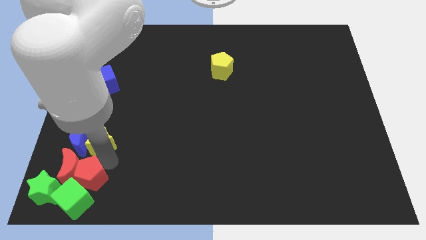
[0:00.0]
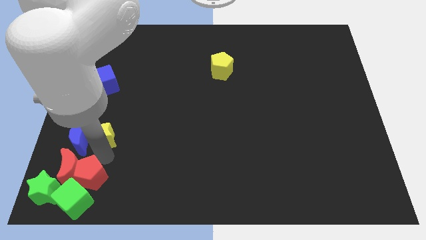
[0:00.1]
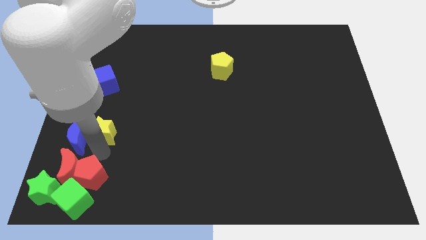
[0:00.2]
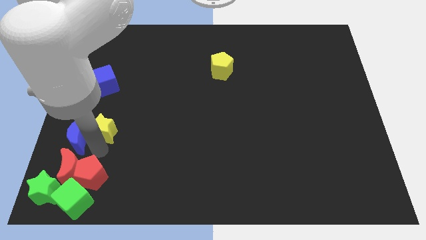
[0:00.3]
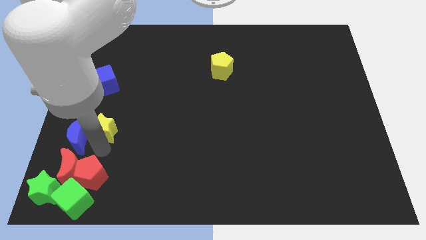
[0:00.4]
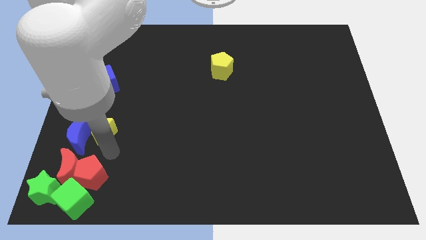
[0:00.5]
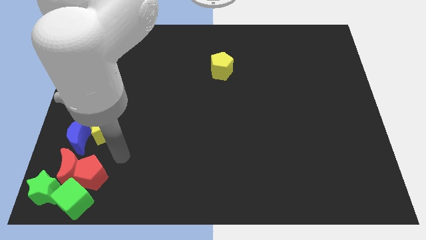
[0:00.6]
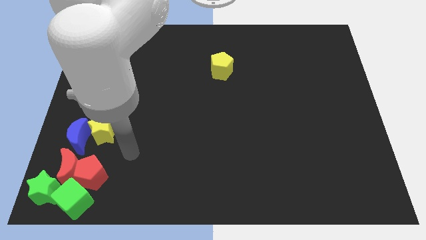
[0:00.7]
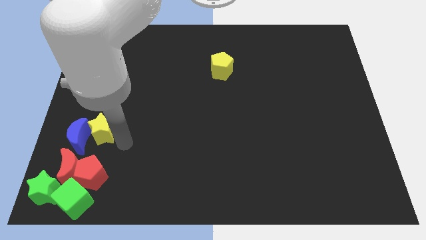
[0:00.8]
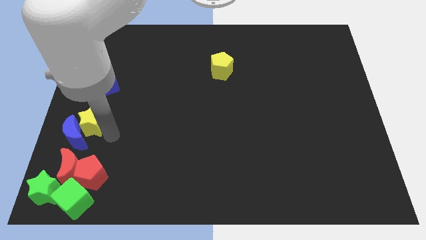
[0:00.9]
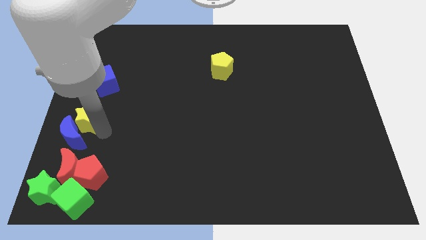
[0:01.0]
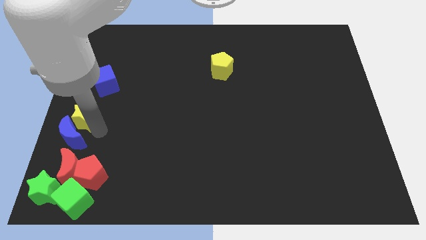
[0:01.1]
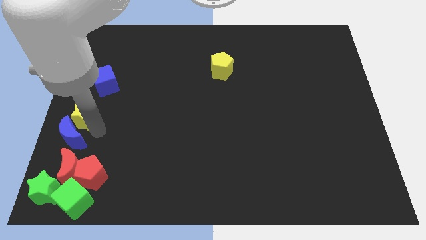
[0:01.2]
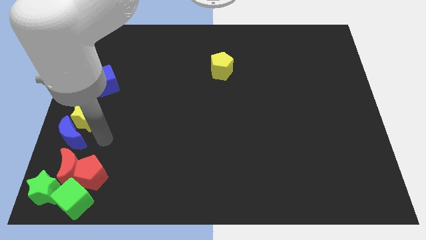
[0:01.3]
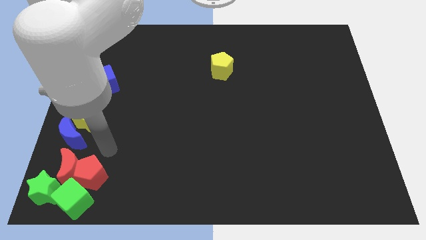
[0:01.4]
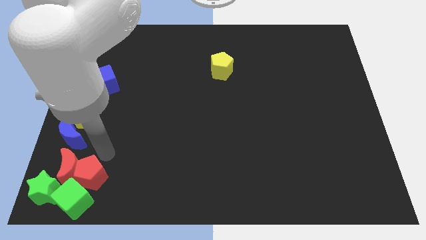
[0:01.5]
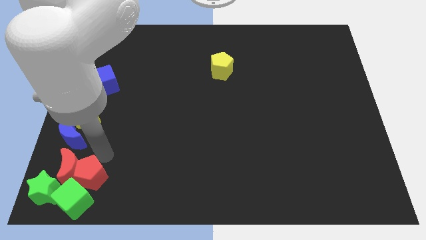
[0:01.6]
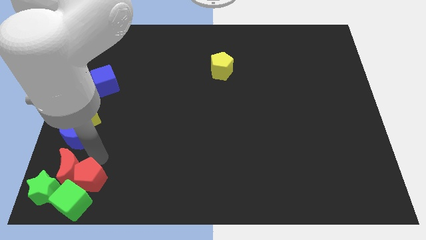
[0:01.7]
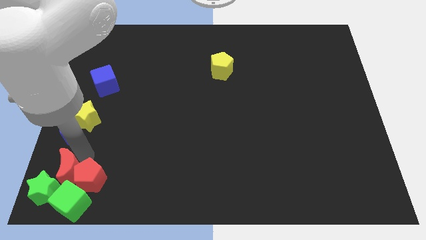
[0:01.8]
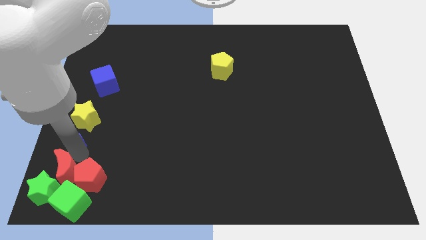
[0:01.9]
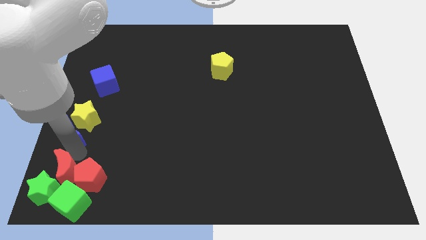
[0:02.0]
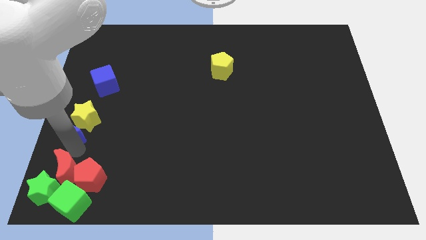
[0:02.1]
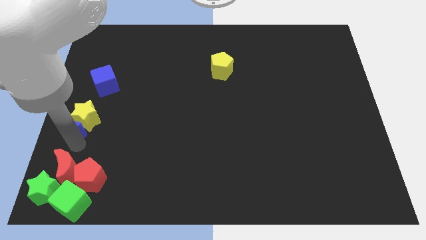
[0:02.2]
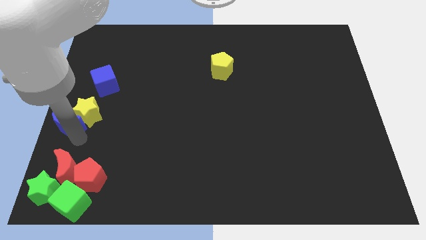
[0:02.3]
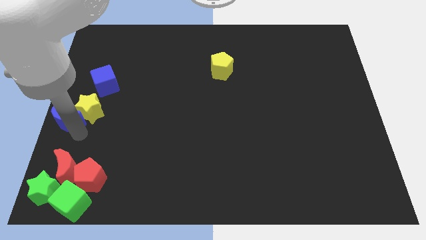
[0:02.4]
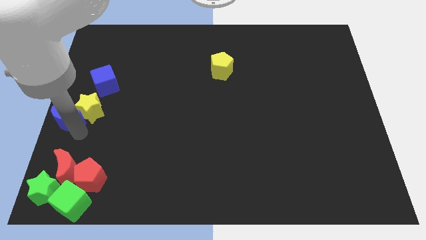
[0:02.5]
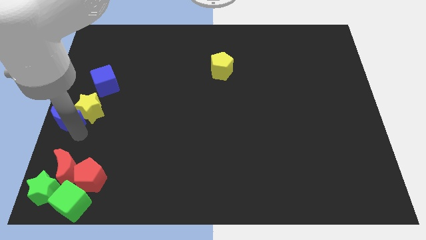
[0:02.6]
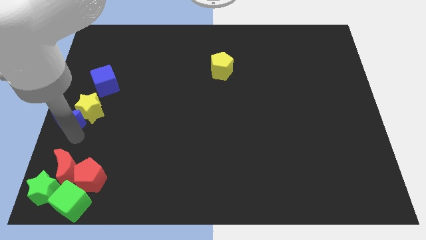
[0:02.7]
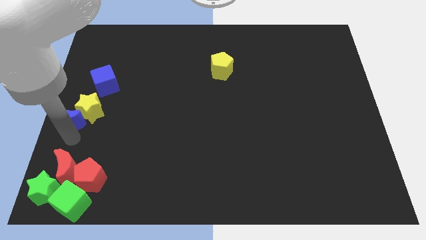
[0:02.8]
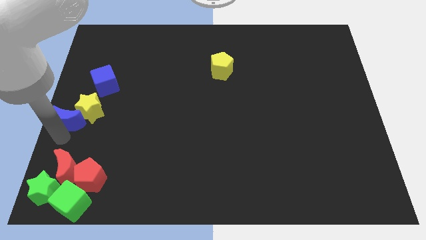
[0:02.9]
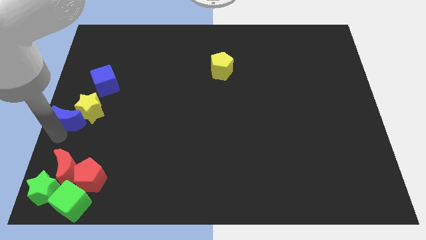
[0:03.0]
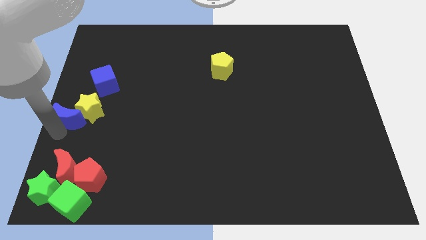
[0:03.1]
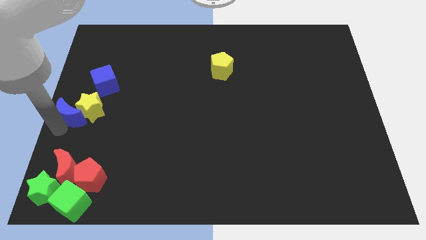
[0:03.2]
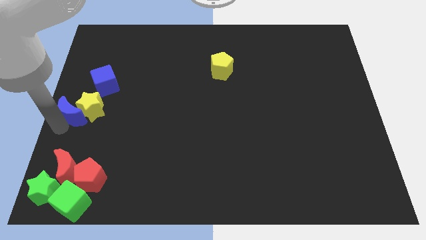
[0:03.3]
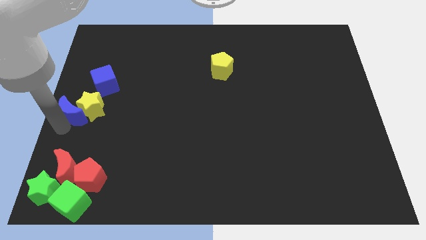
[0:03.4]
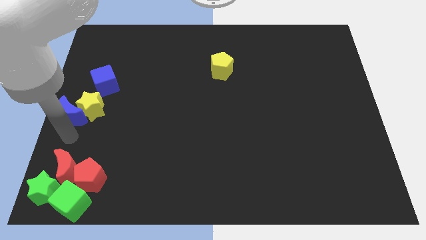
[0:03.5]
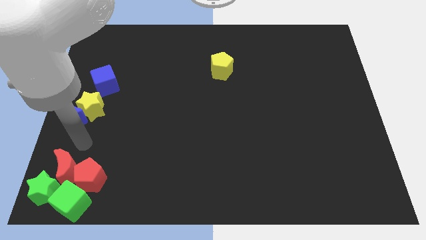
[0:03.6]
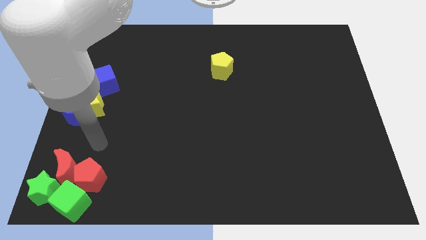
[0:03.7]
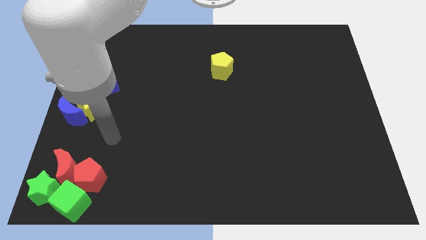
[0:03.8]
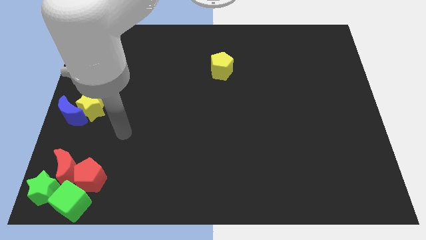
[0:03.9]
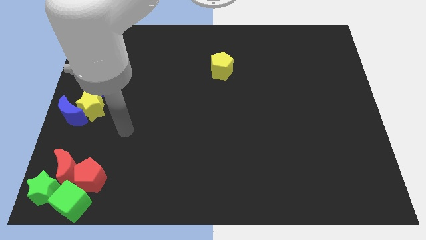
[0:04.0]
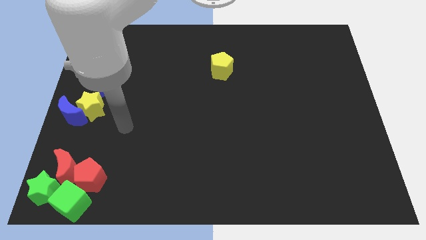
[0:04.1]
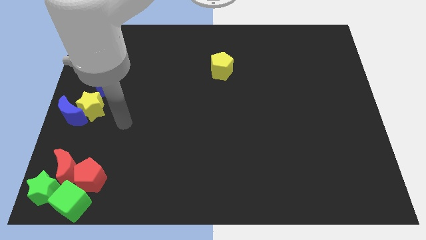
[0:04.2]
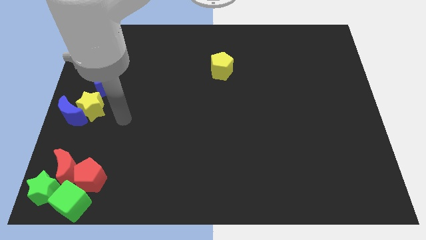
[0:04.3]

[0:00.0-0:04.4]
put the blue moon and yellow star vertically to the top side of the red moon

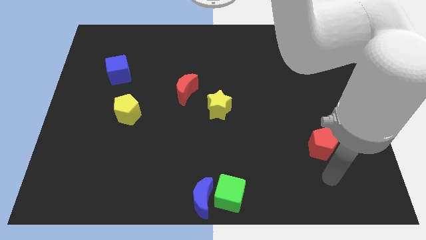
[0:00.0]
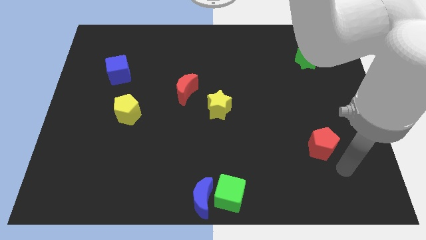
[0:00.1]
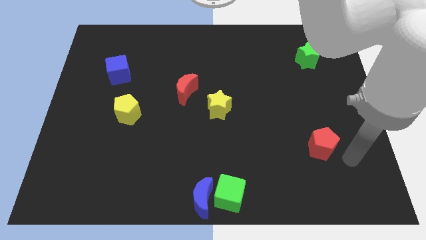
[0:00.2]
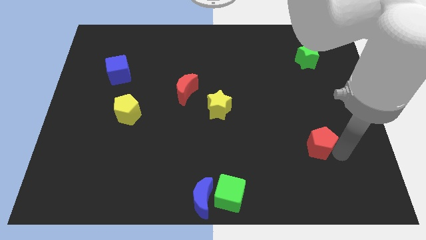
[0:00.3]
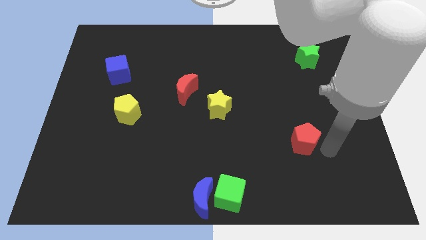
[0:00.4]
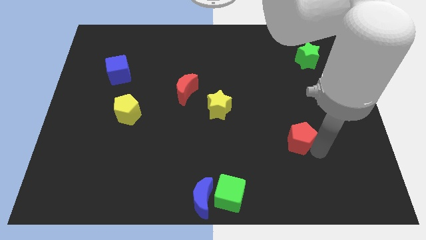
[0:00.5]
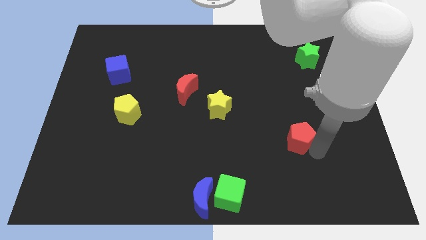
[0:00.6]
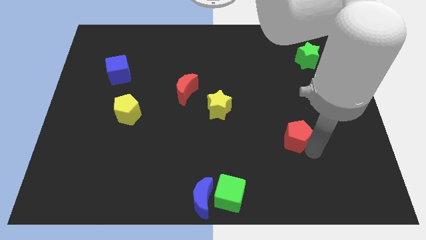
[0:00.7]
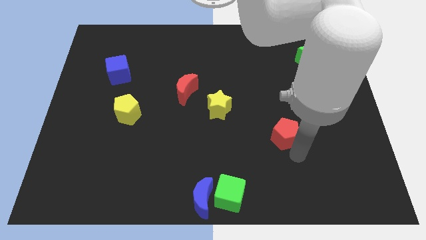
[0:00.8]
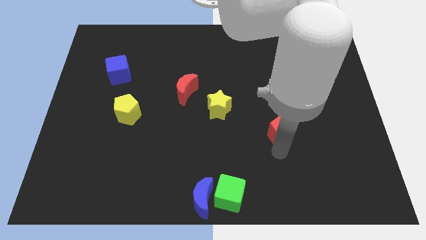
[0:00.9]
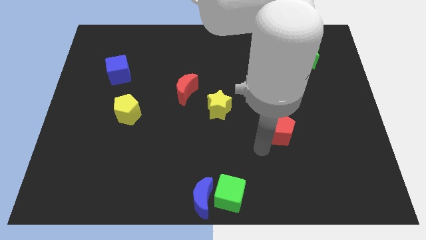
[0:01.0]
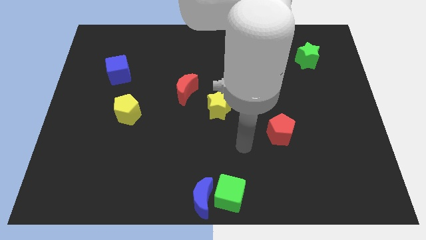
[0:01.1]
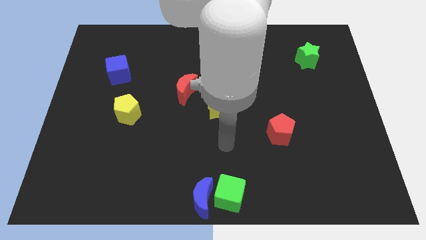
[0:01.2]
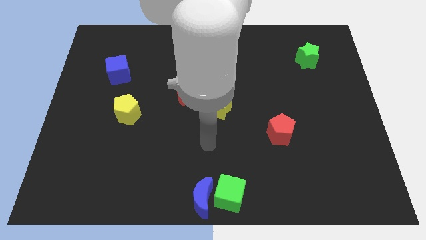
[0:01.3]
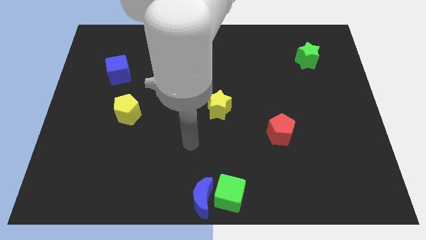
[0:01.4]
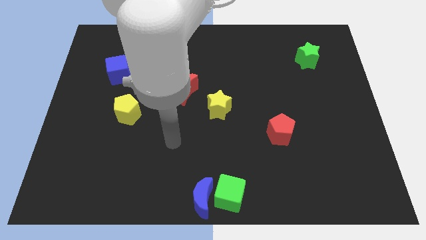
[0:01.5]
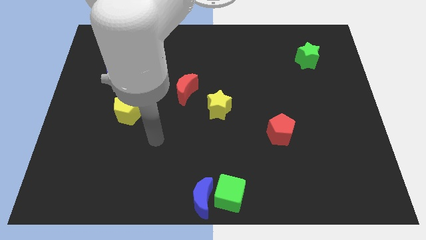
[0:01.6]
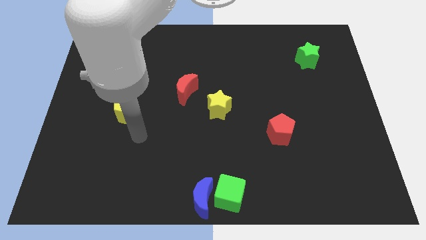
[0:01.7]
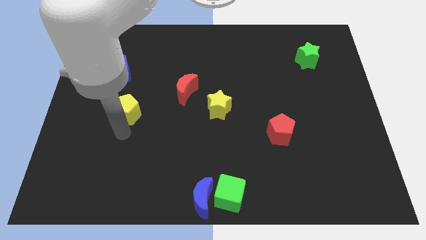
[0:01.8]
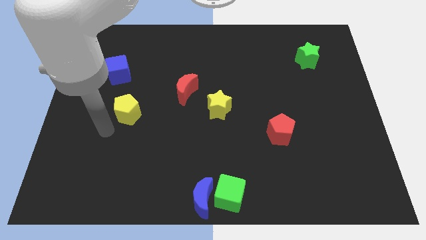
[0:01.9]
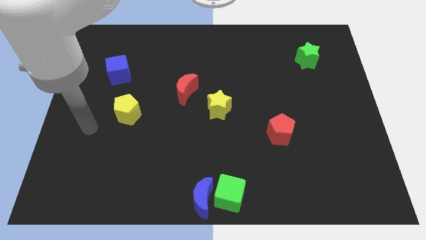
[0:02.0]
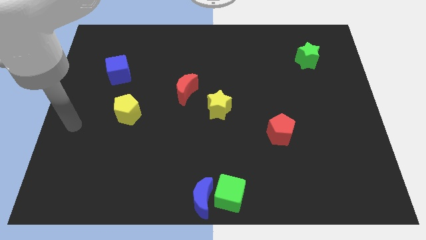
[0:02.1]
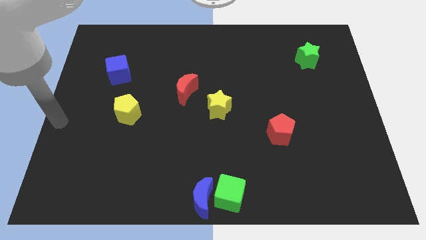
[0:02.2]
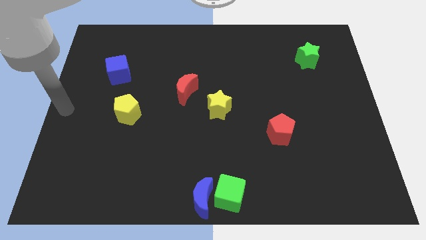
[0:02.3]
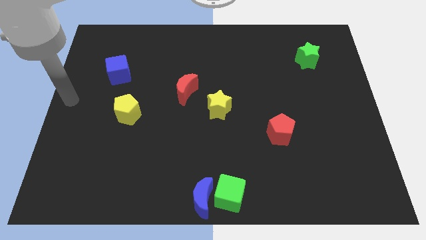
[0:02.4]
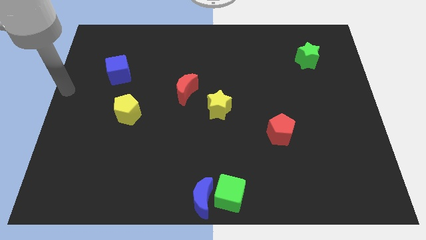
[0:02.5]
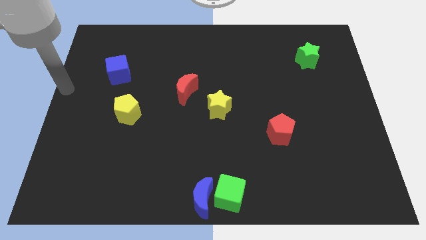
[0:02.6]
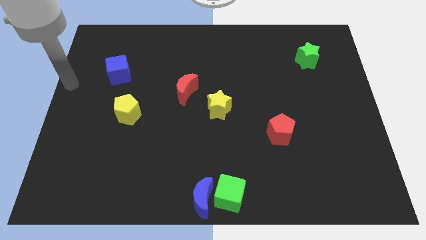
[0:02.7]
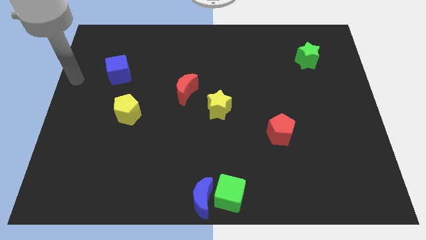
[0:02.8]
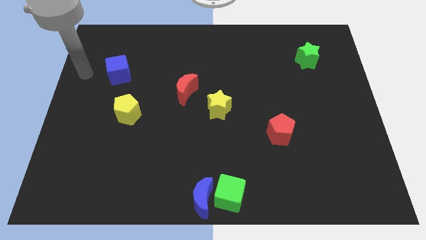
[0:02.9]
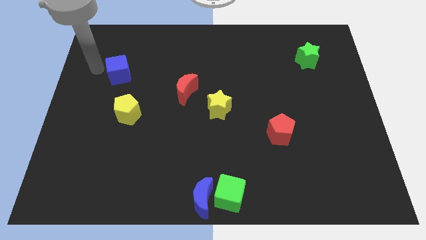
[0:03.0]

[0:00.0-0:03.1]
push the red pentagon diagonally in between the green cube and the green star

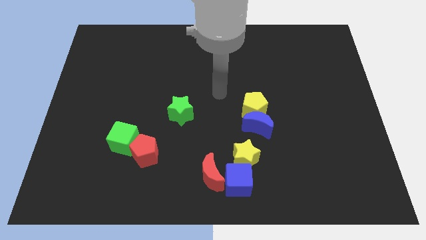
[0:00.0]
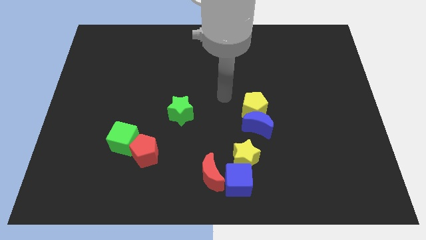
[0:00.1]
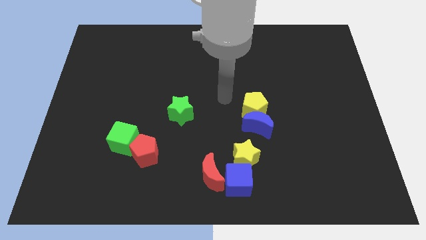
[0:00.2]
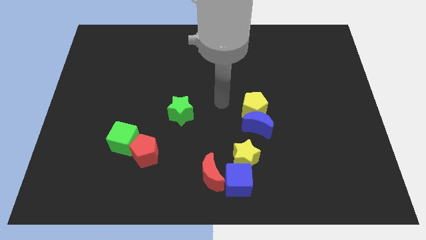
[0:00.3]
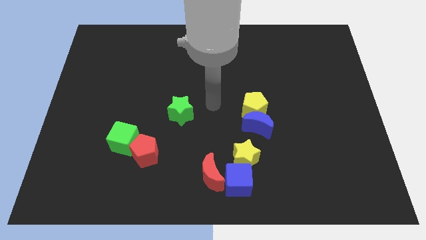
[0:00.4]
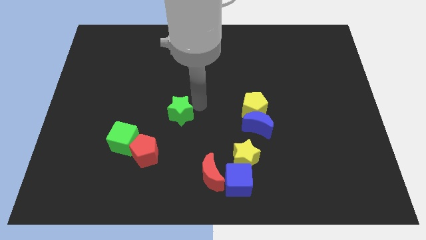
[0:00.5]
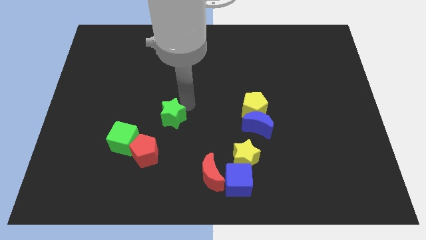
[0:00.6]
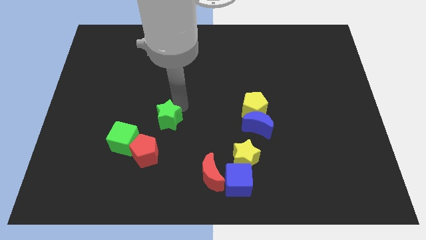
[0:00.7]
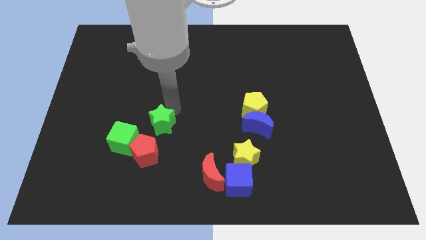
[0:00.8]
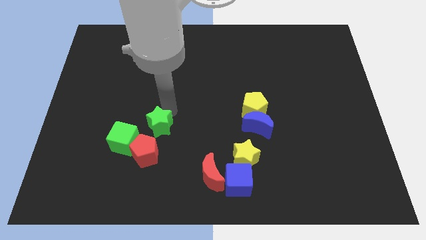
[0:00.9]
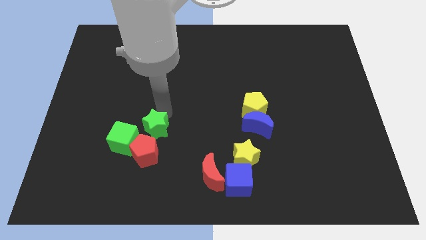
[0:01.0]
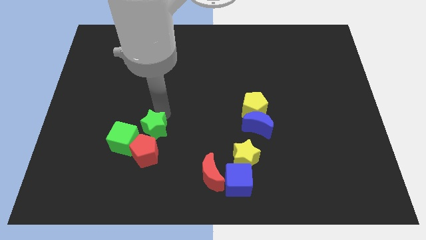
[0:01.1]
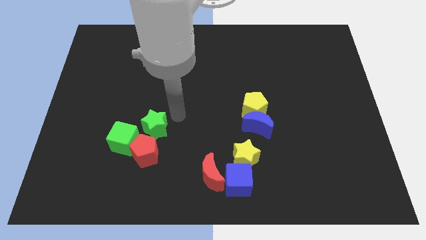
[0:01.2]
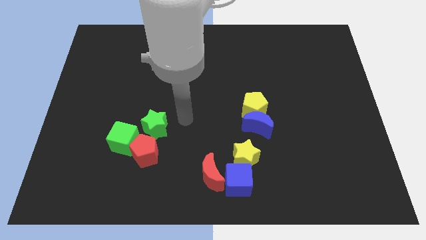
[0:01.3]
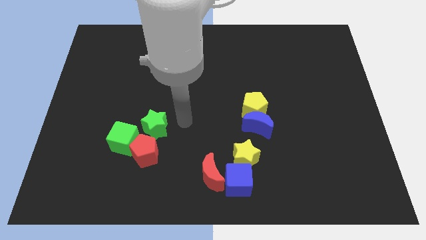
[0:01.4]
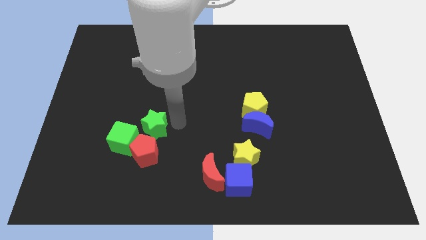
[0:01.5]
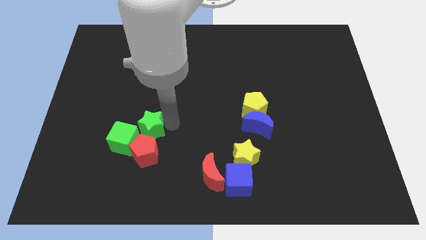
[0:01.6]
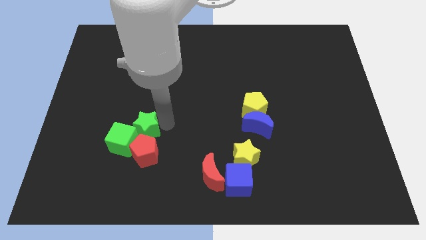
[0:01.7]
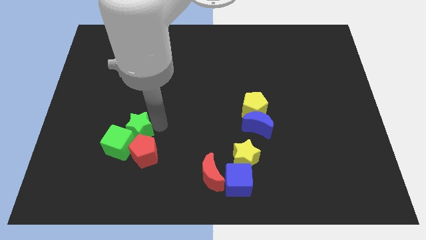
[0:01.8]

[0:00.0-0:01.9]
push the green star to the top side of the red pentagon
